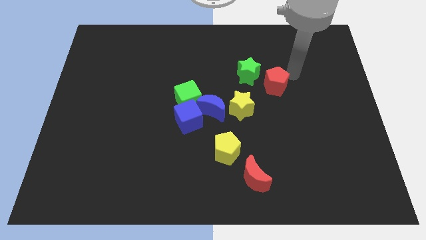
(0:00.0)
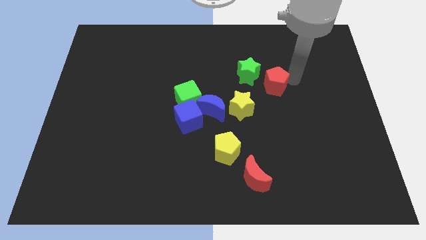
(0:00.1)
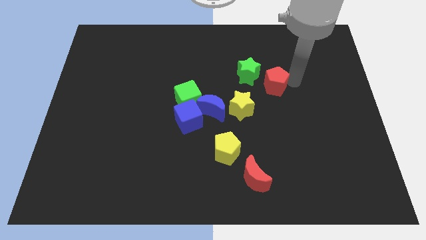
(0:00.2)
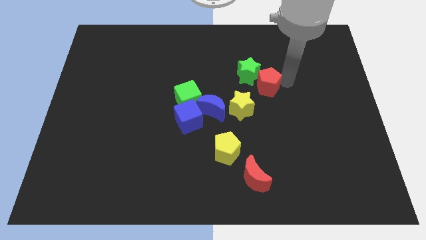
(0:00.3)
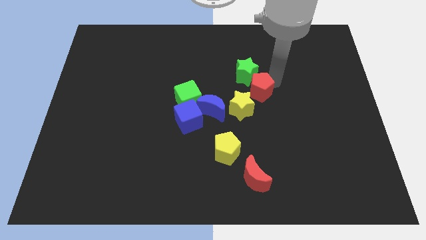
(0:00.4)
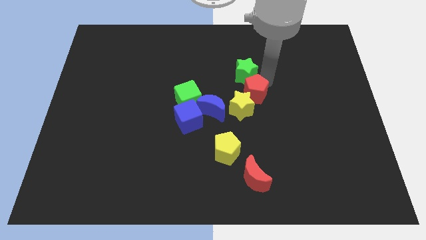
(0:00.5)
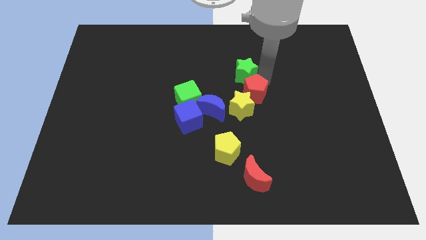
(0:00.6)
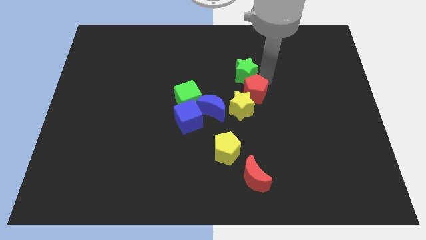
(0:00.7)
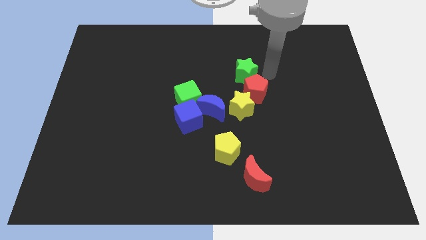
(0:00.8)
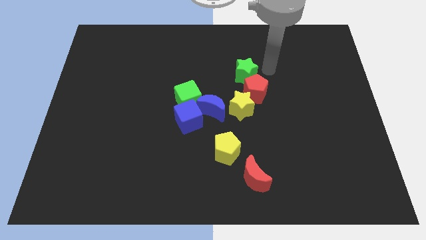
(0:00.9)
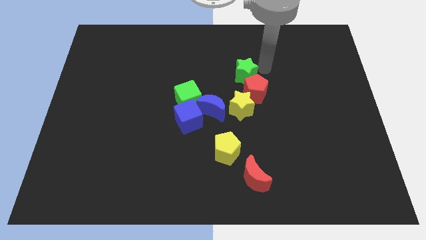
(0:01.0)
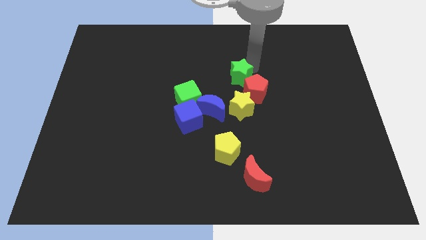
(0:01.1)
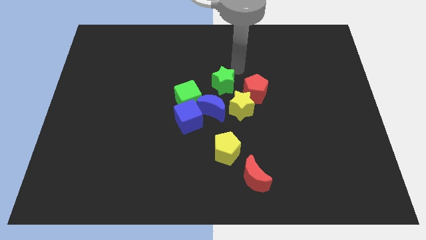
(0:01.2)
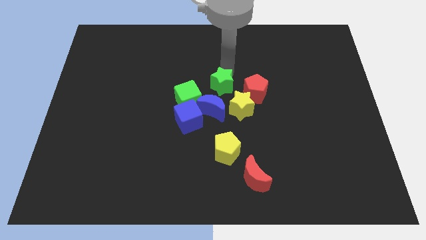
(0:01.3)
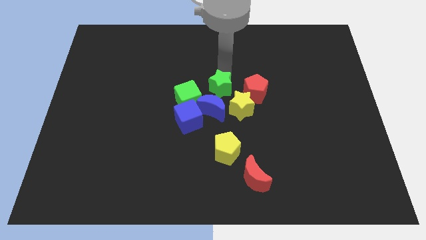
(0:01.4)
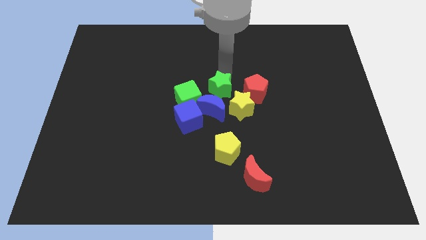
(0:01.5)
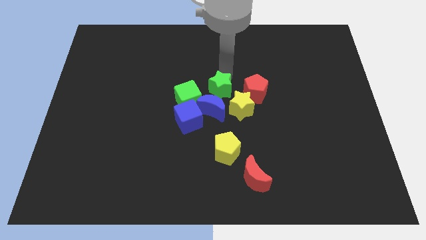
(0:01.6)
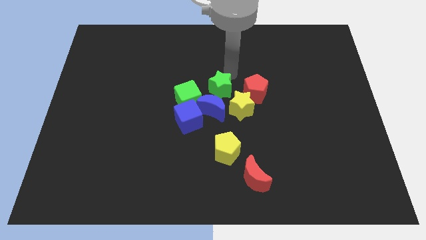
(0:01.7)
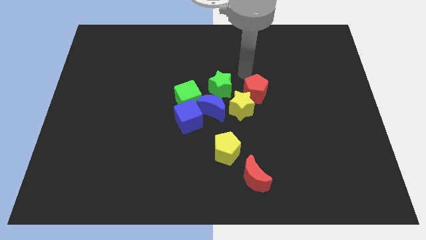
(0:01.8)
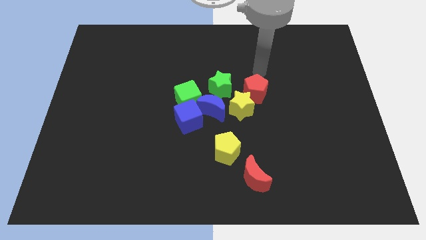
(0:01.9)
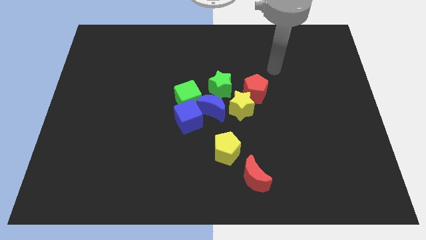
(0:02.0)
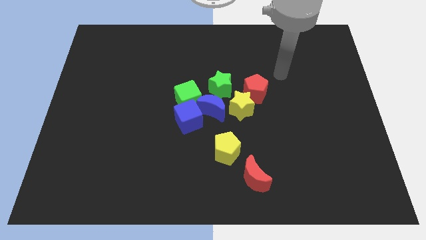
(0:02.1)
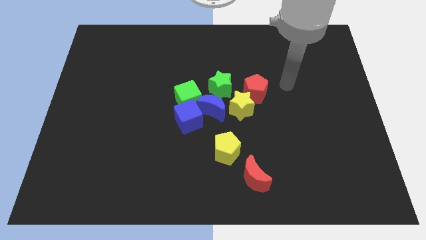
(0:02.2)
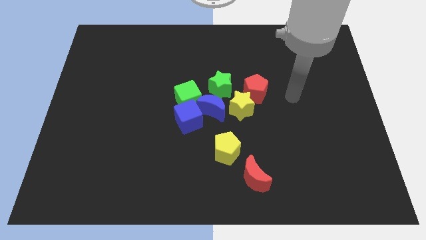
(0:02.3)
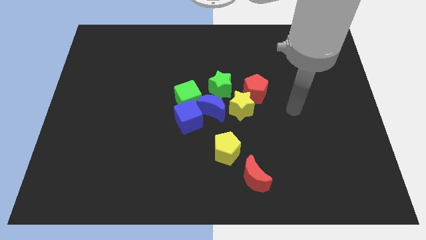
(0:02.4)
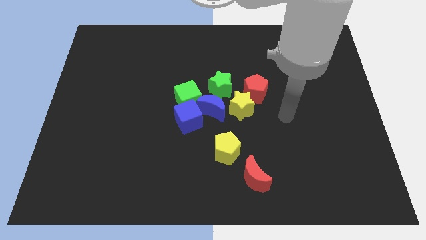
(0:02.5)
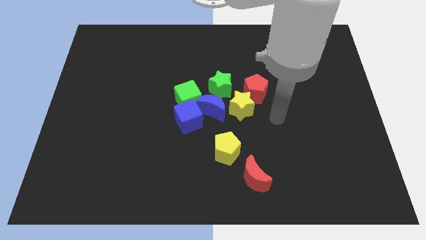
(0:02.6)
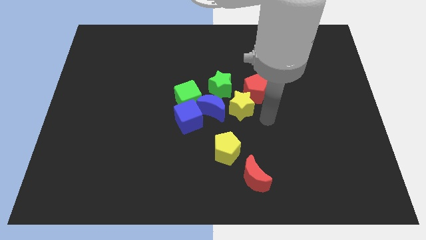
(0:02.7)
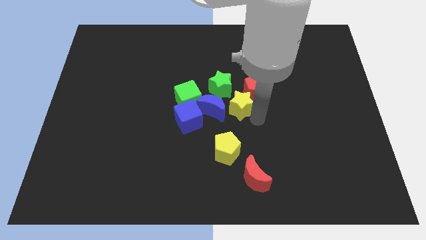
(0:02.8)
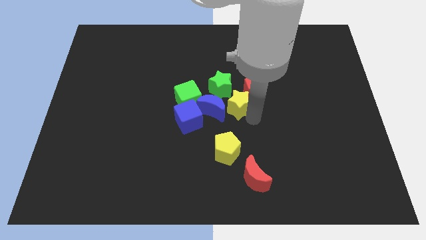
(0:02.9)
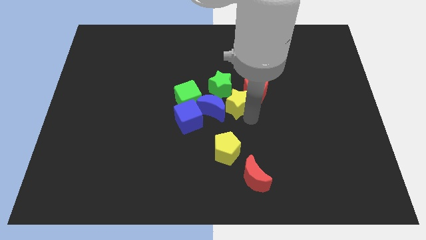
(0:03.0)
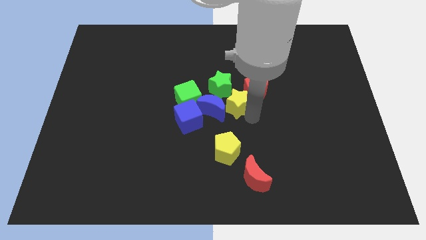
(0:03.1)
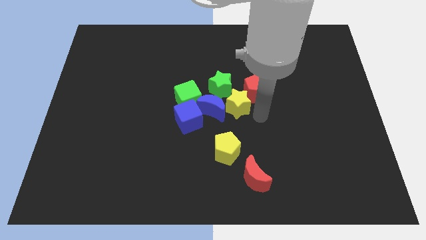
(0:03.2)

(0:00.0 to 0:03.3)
make the red pentagon green star and yellow together

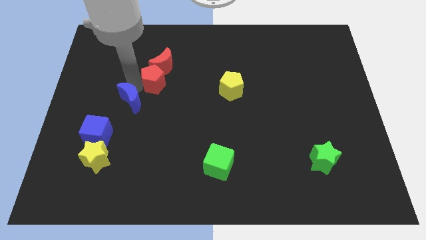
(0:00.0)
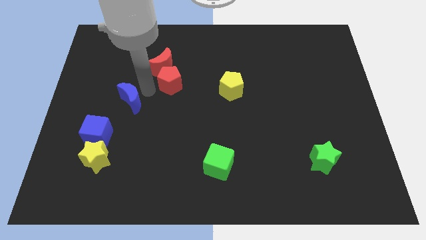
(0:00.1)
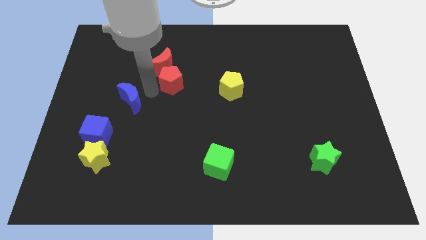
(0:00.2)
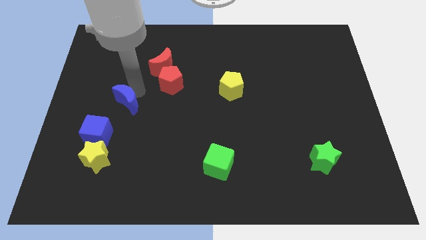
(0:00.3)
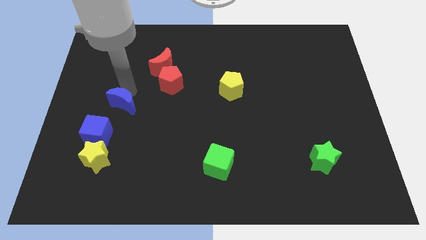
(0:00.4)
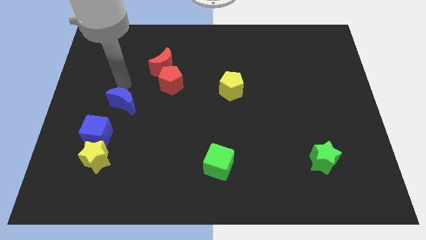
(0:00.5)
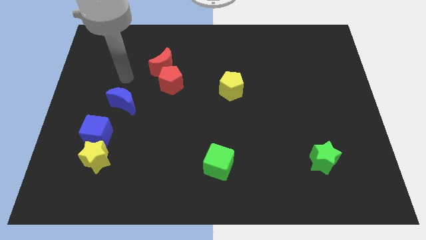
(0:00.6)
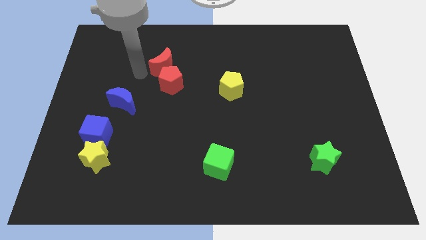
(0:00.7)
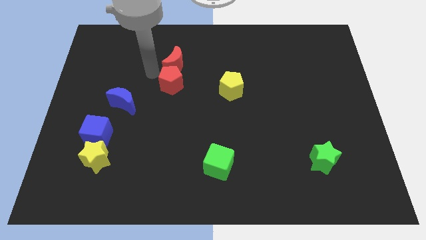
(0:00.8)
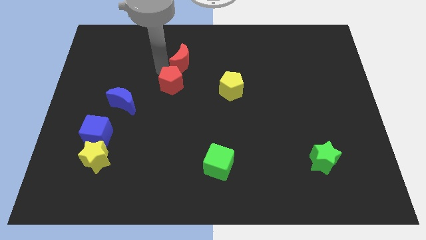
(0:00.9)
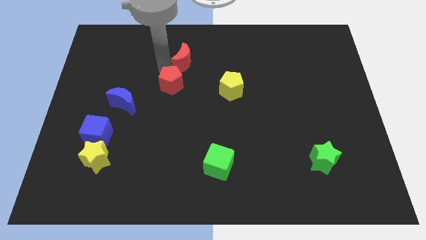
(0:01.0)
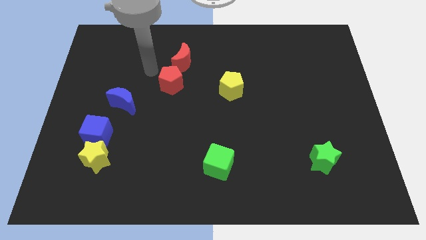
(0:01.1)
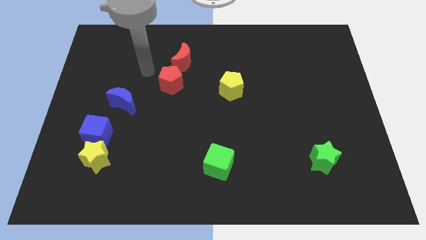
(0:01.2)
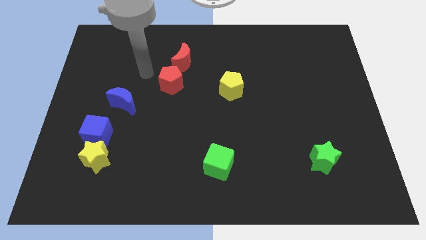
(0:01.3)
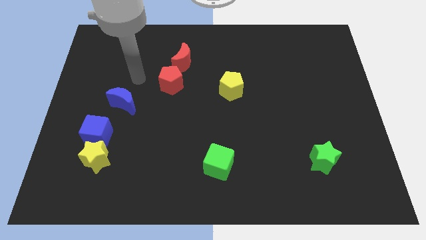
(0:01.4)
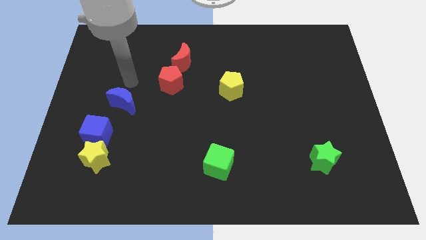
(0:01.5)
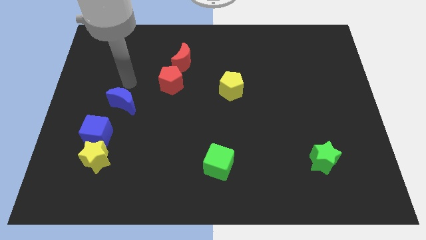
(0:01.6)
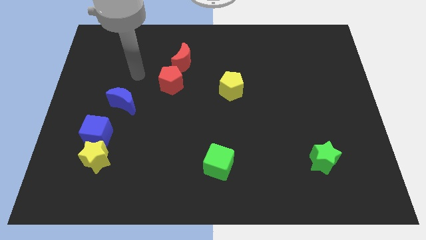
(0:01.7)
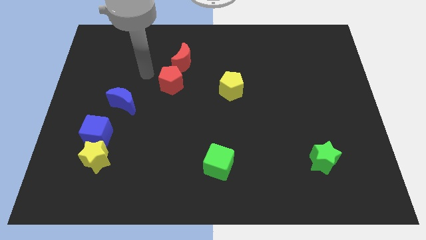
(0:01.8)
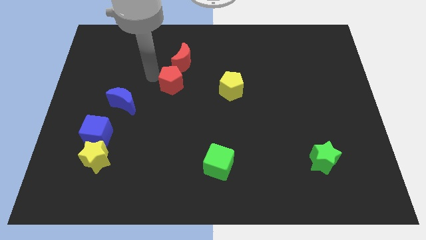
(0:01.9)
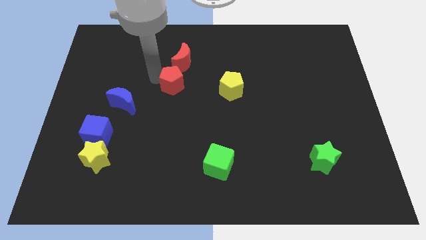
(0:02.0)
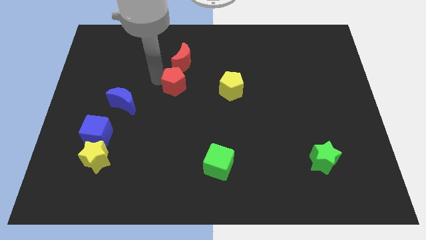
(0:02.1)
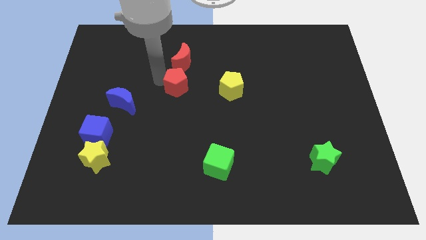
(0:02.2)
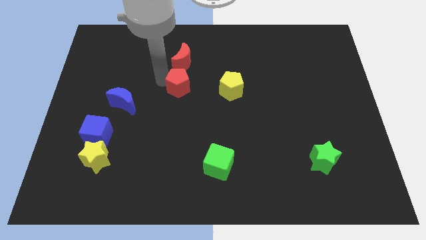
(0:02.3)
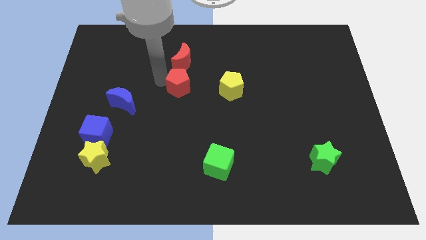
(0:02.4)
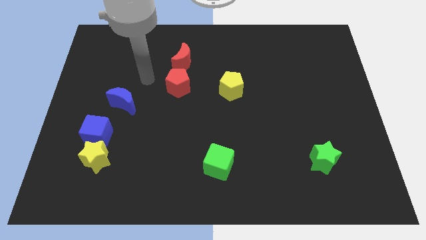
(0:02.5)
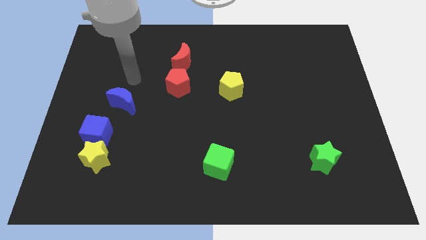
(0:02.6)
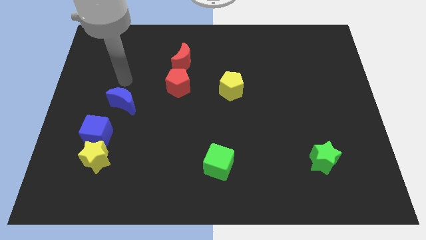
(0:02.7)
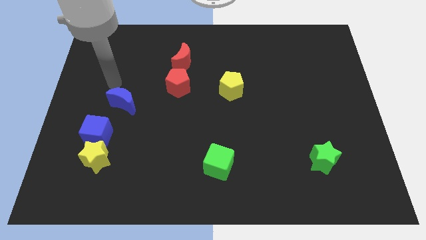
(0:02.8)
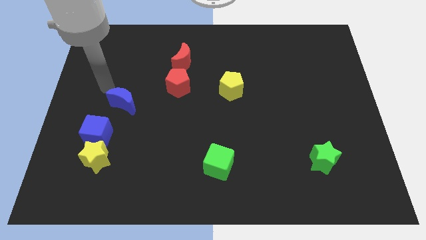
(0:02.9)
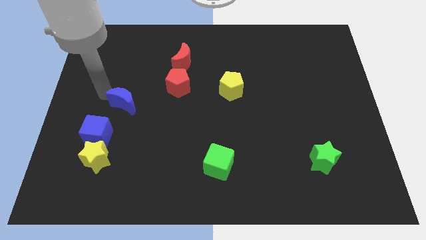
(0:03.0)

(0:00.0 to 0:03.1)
push the red pentagon to the left of the yellow pentagon

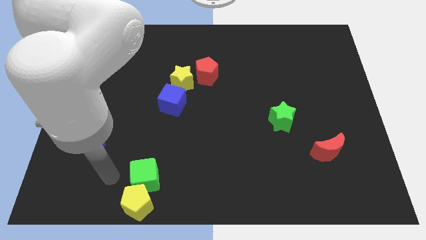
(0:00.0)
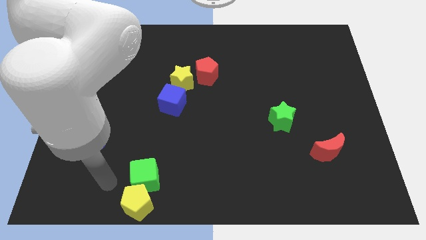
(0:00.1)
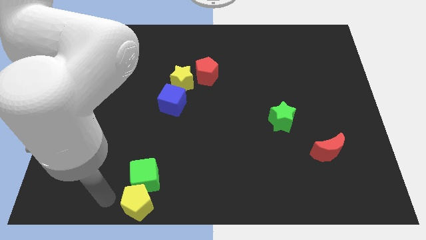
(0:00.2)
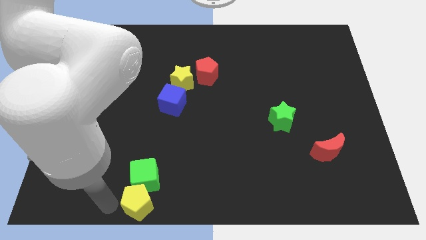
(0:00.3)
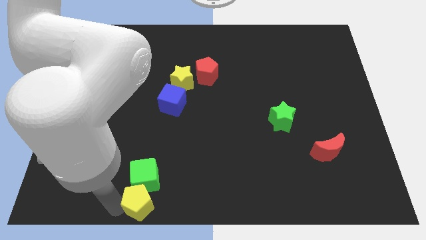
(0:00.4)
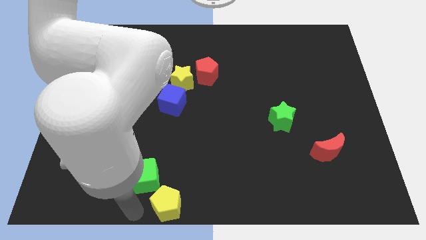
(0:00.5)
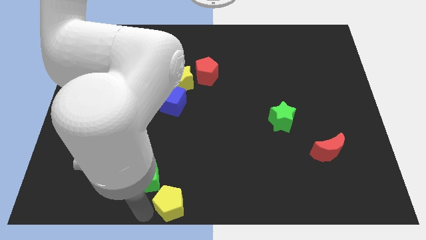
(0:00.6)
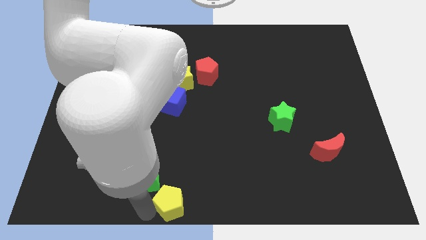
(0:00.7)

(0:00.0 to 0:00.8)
separate the yellow pentagon from the green cube

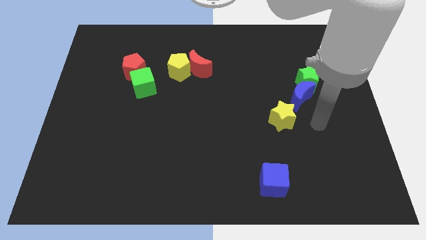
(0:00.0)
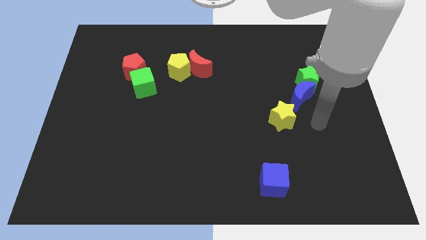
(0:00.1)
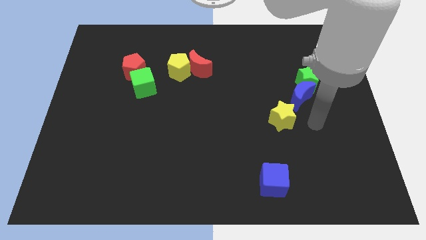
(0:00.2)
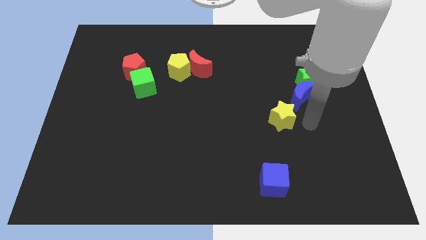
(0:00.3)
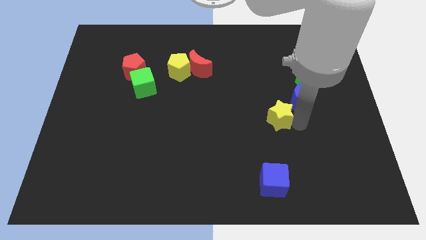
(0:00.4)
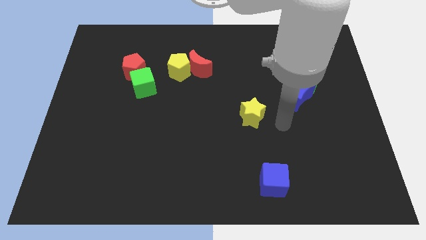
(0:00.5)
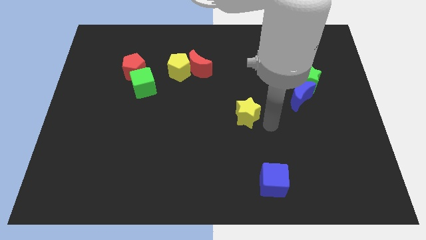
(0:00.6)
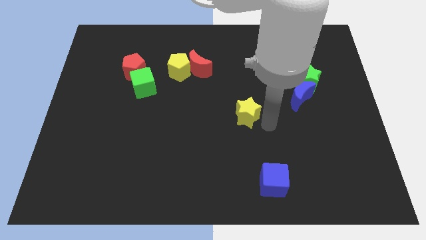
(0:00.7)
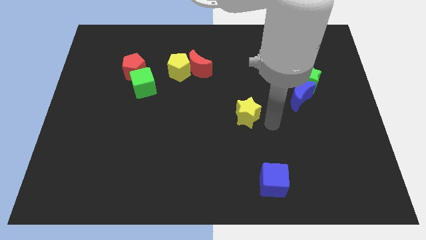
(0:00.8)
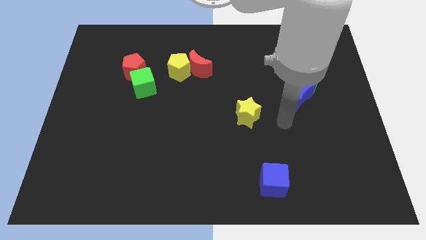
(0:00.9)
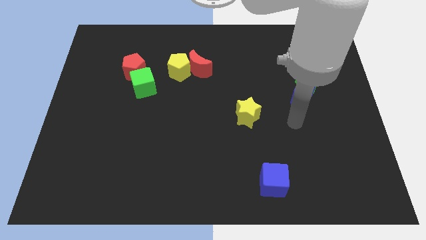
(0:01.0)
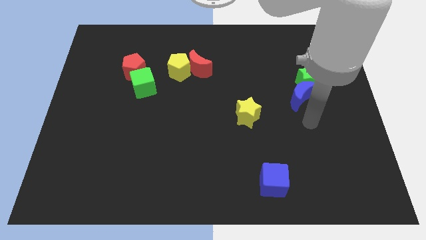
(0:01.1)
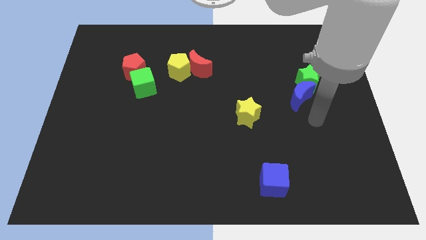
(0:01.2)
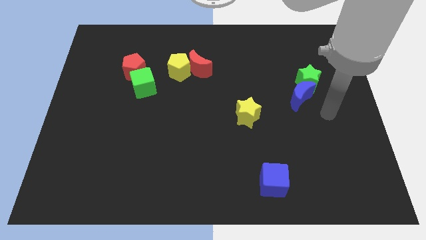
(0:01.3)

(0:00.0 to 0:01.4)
push the yellow star slightly towards left

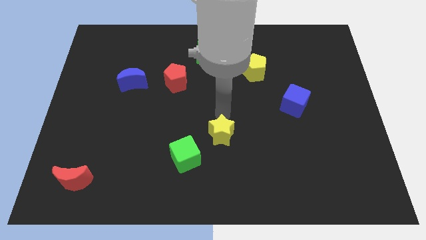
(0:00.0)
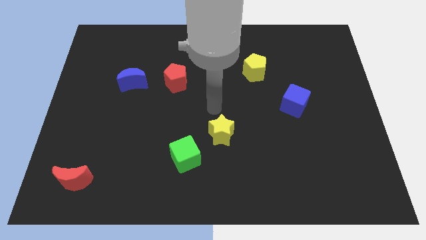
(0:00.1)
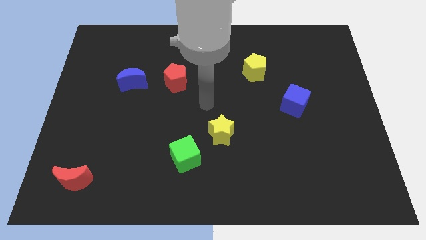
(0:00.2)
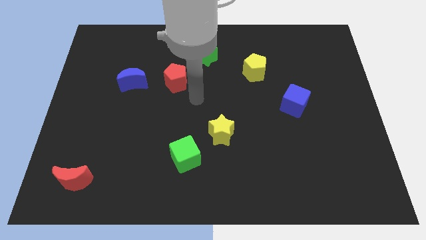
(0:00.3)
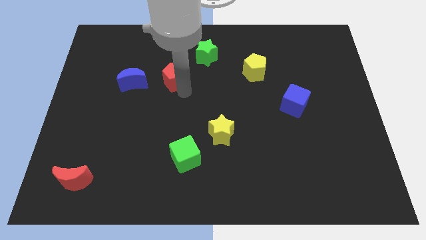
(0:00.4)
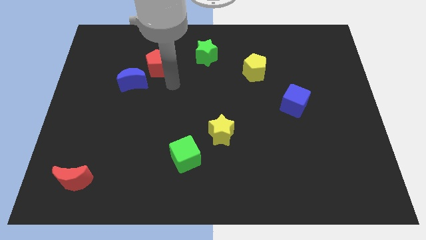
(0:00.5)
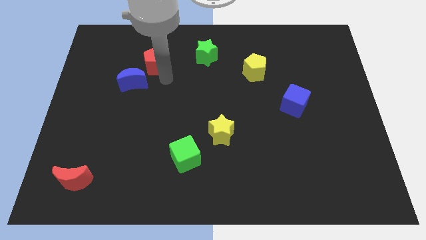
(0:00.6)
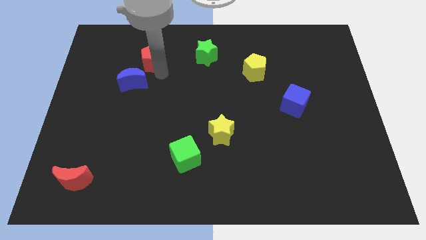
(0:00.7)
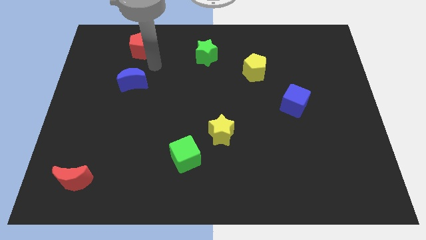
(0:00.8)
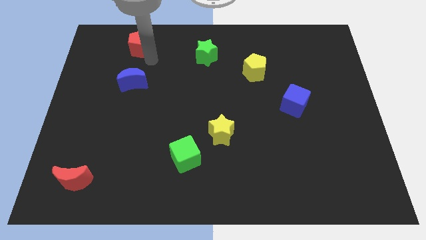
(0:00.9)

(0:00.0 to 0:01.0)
push red pentagon diagonally upwards
